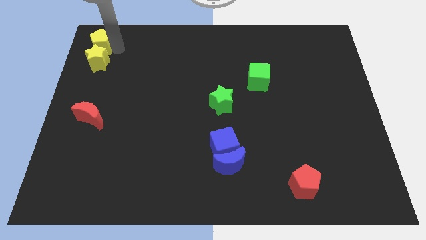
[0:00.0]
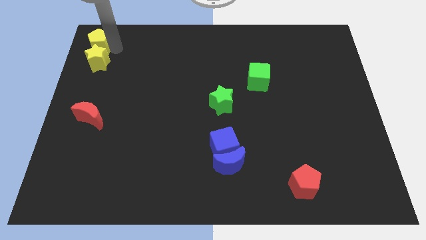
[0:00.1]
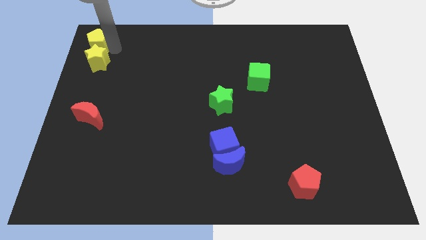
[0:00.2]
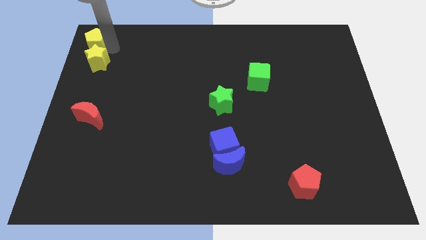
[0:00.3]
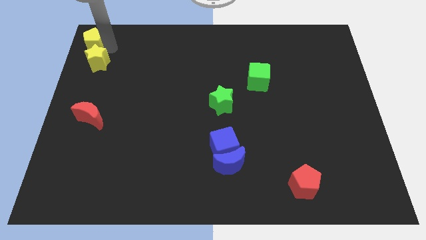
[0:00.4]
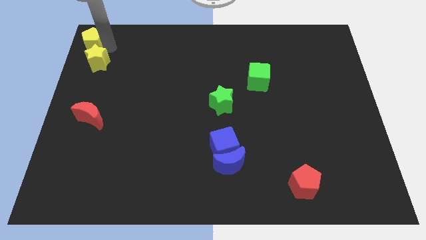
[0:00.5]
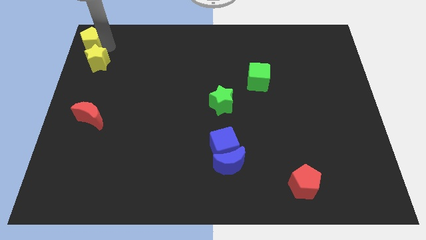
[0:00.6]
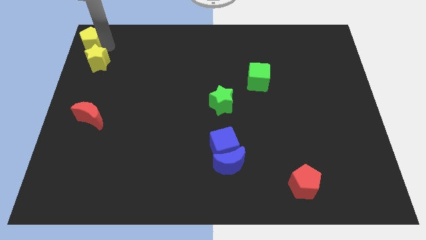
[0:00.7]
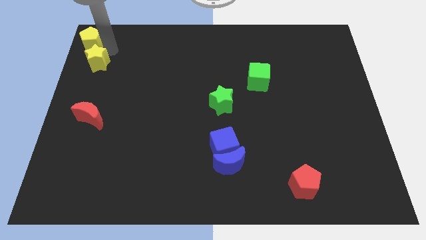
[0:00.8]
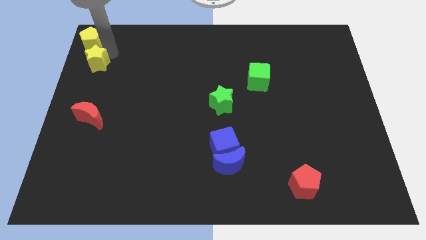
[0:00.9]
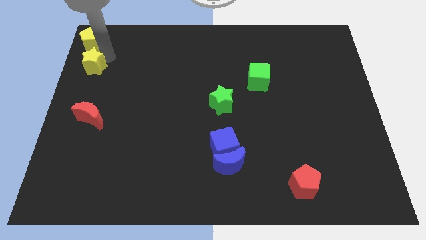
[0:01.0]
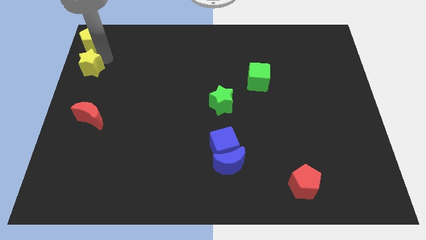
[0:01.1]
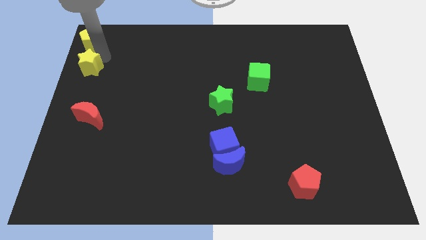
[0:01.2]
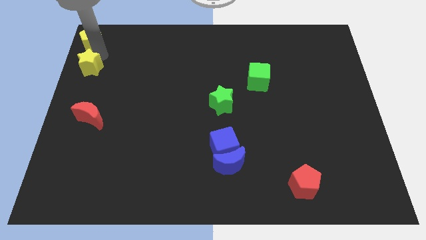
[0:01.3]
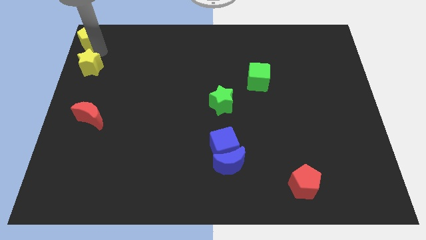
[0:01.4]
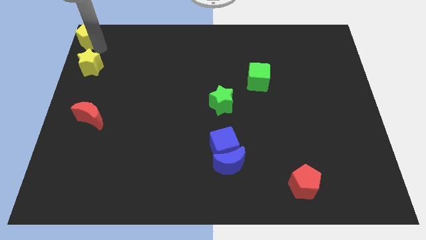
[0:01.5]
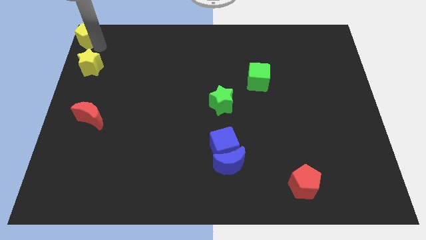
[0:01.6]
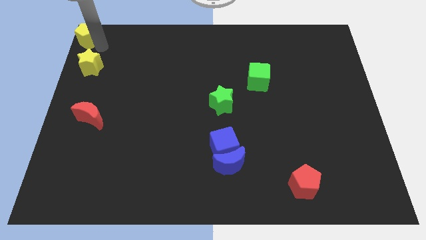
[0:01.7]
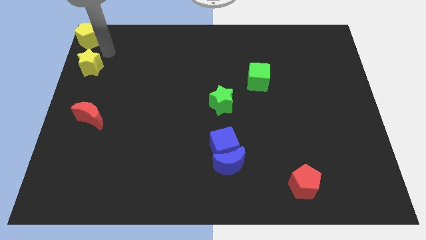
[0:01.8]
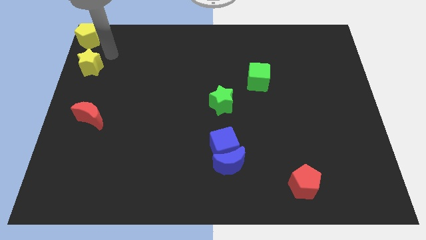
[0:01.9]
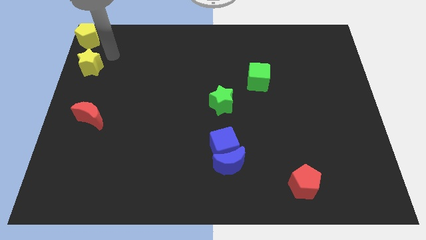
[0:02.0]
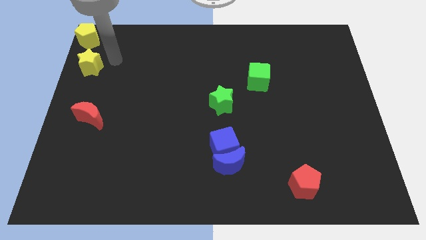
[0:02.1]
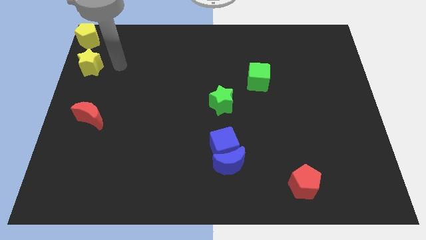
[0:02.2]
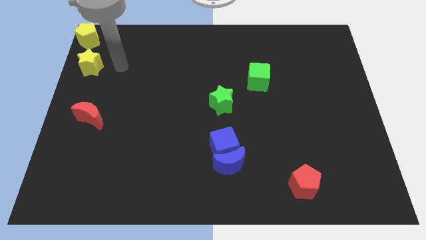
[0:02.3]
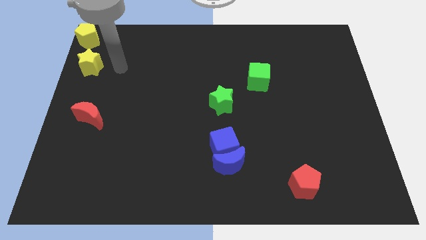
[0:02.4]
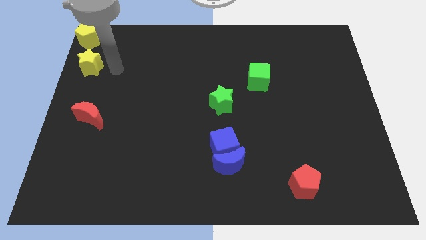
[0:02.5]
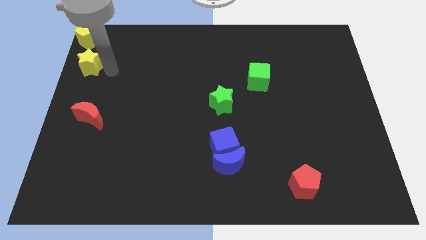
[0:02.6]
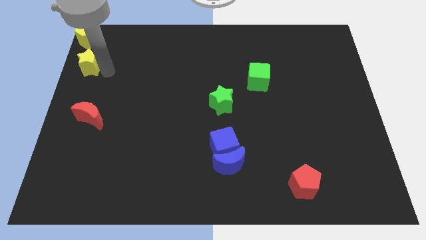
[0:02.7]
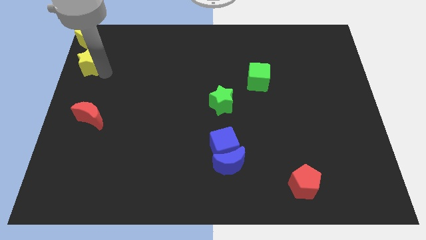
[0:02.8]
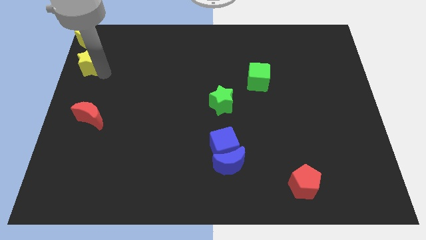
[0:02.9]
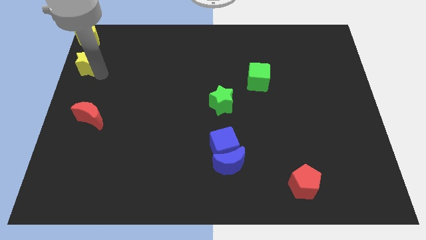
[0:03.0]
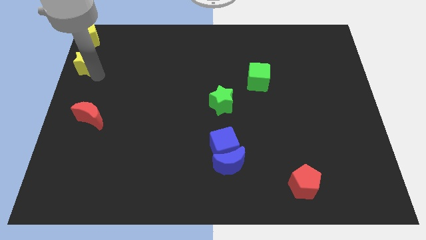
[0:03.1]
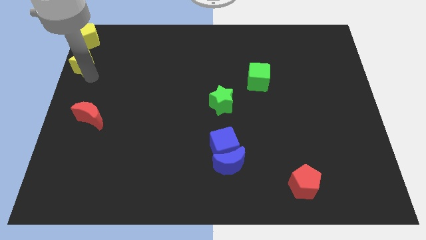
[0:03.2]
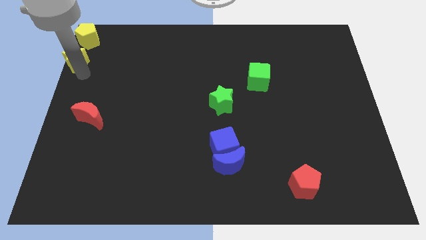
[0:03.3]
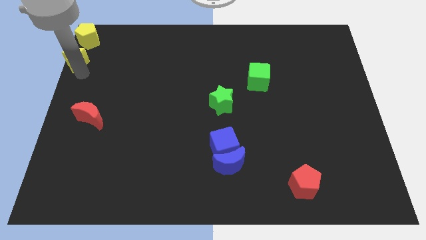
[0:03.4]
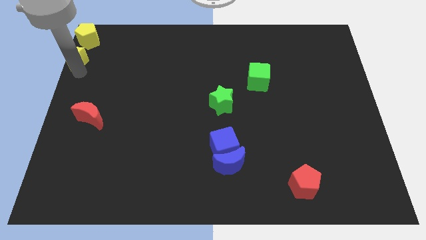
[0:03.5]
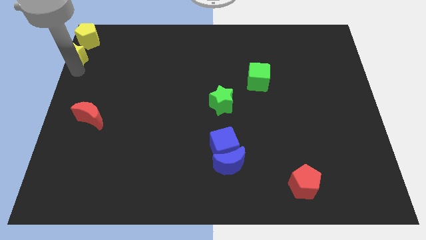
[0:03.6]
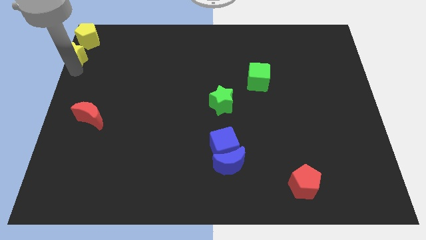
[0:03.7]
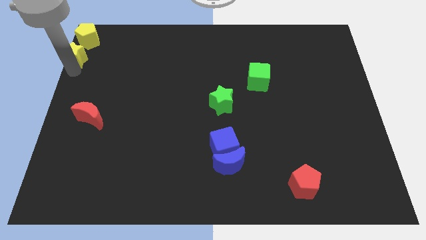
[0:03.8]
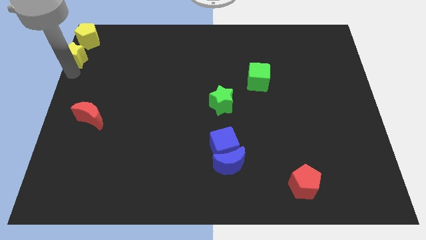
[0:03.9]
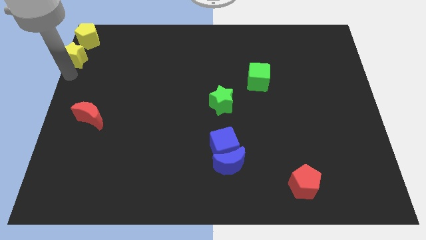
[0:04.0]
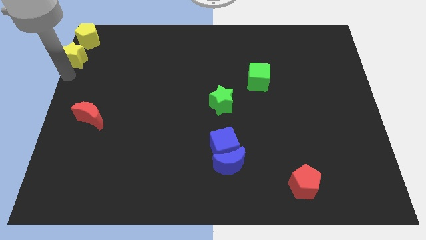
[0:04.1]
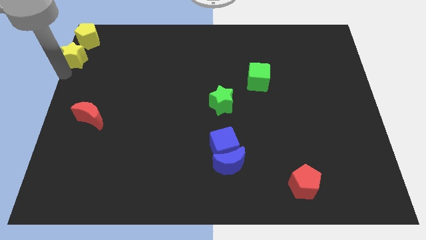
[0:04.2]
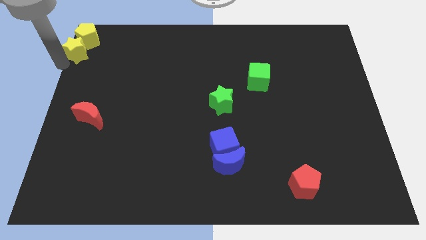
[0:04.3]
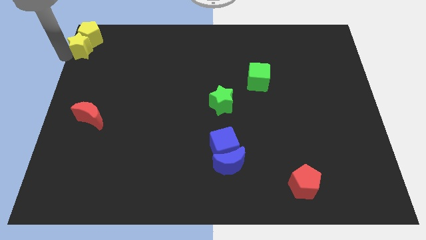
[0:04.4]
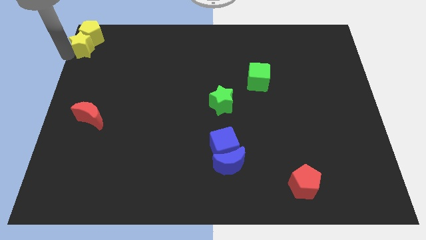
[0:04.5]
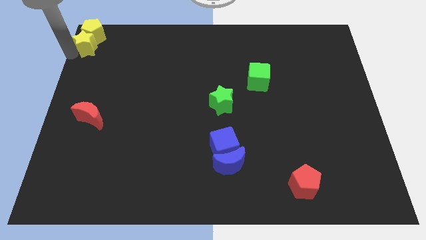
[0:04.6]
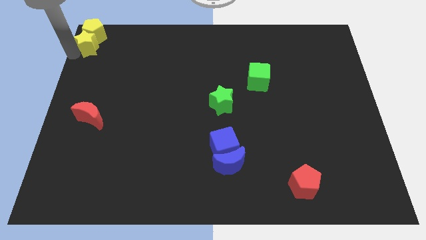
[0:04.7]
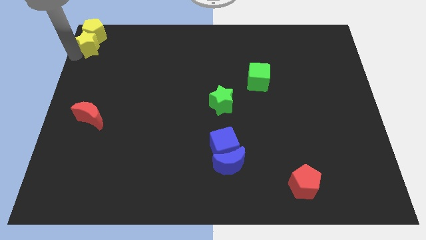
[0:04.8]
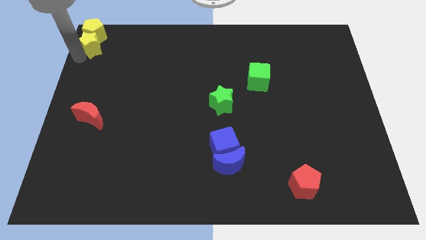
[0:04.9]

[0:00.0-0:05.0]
push the yellow star into the yellow pentagon

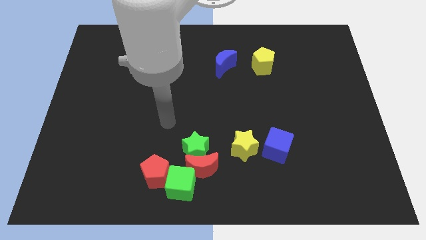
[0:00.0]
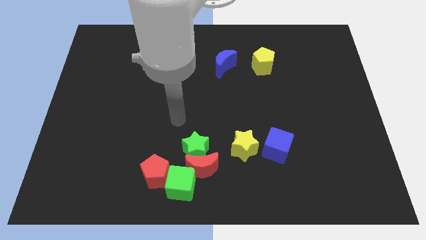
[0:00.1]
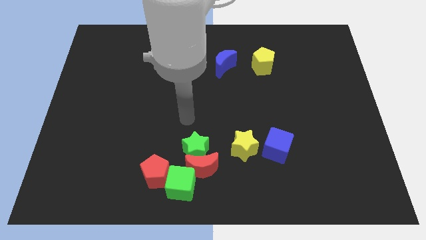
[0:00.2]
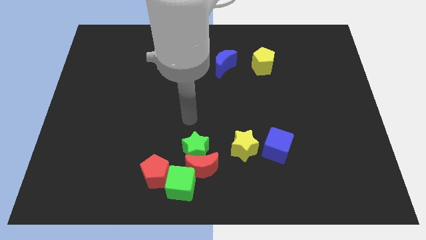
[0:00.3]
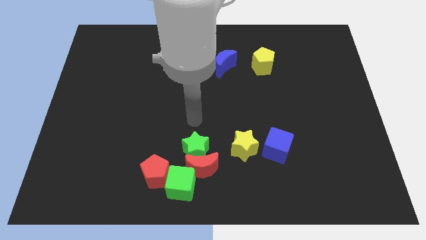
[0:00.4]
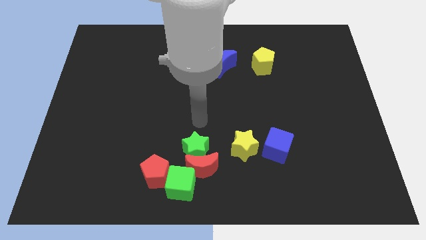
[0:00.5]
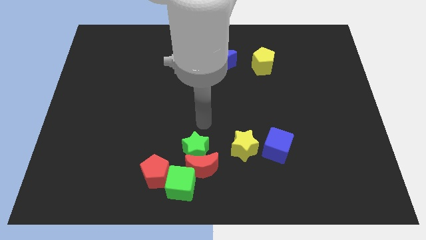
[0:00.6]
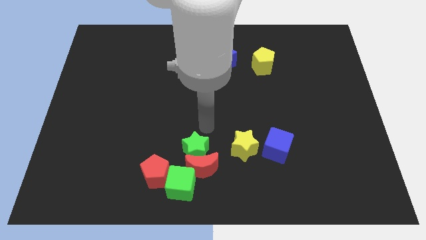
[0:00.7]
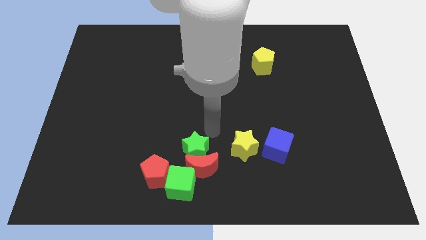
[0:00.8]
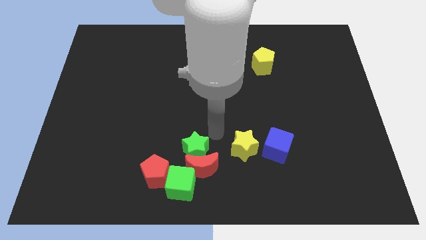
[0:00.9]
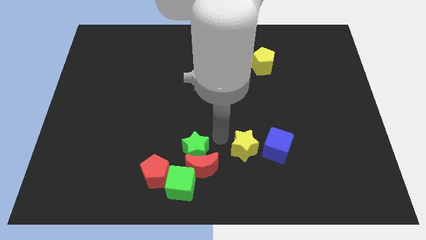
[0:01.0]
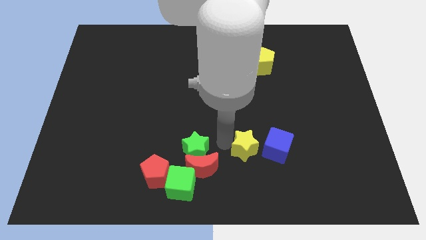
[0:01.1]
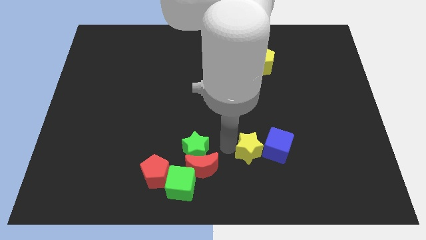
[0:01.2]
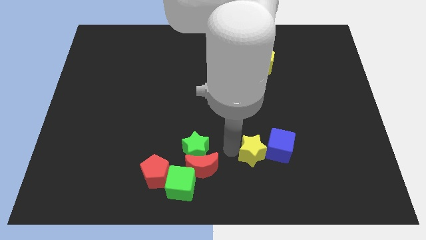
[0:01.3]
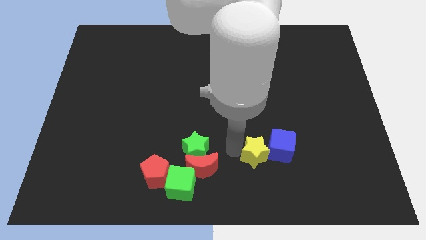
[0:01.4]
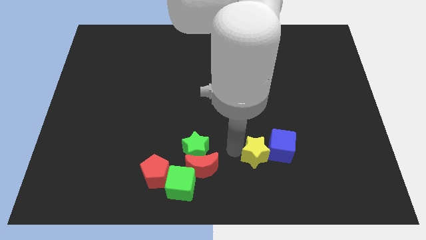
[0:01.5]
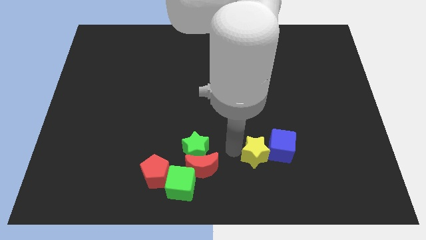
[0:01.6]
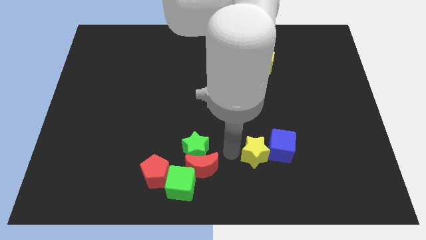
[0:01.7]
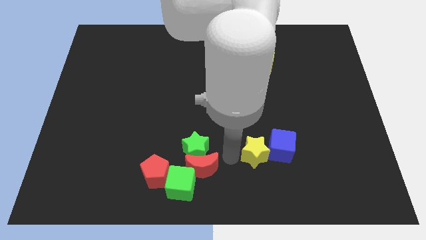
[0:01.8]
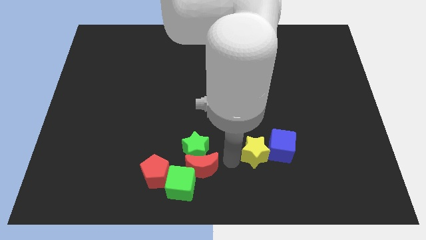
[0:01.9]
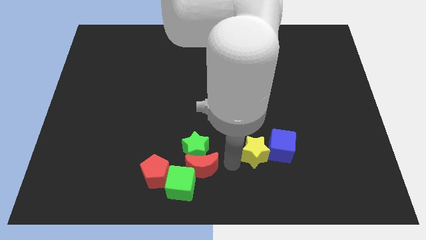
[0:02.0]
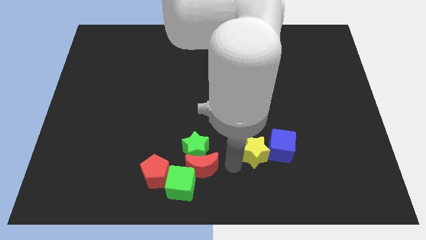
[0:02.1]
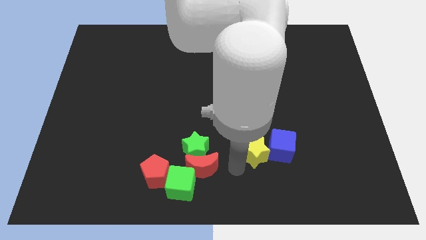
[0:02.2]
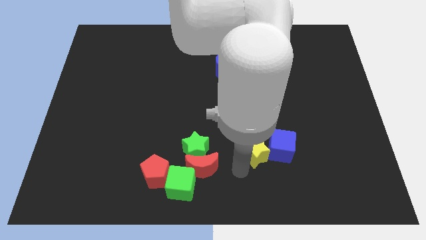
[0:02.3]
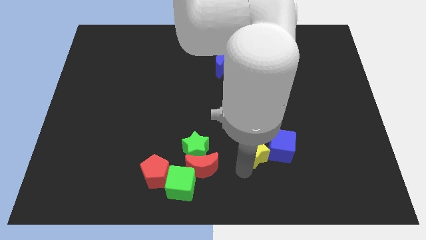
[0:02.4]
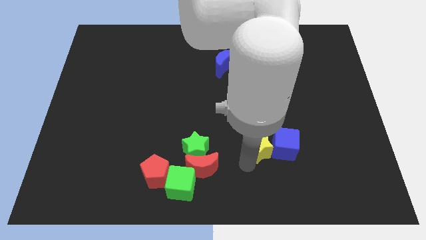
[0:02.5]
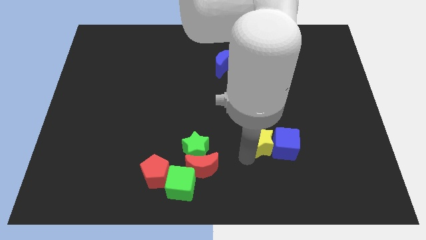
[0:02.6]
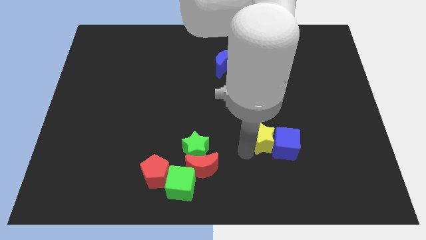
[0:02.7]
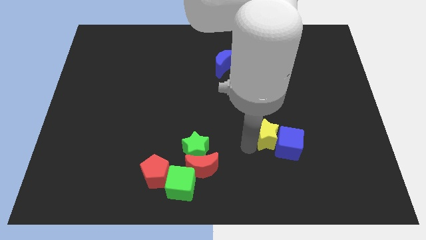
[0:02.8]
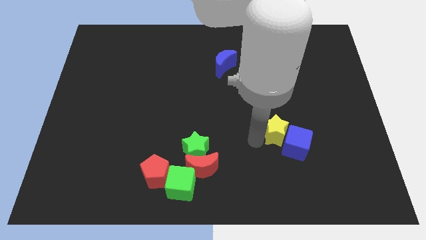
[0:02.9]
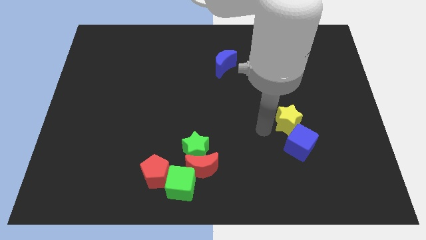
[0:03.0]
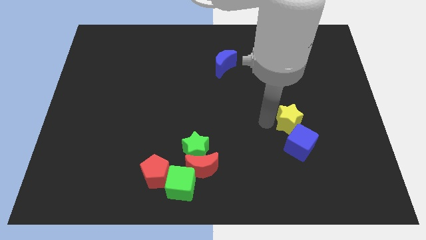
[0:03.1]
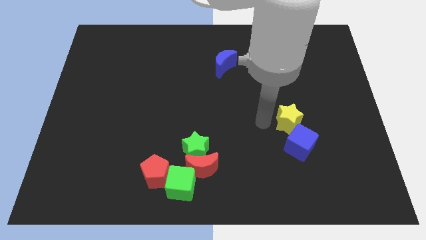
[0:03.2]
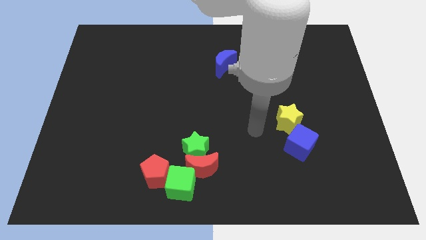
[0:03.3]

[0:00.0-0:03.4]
move the yellow star to the top of the blue cube

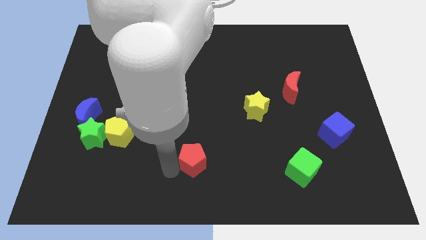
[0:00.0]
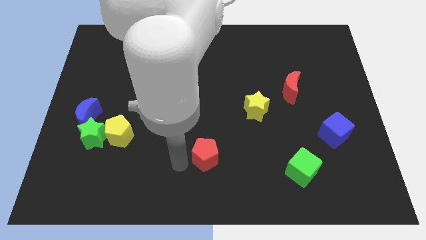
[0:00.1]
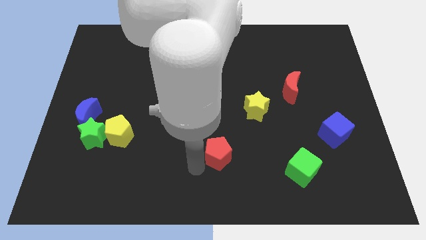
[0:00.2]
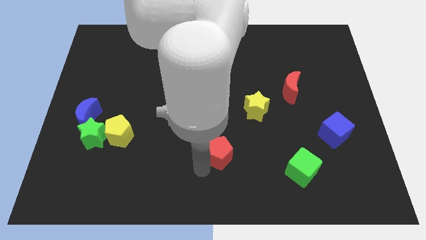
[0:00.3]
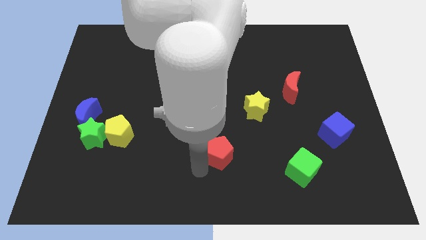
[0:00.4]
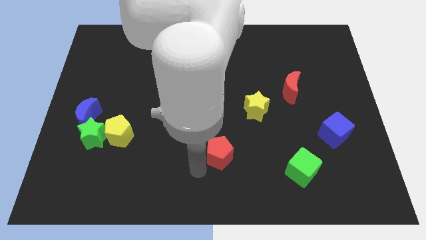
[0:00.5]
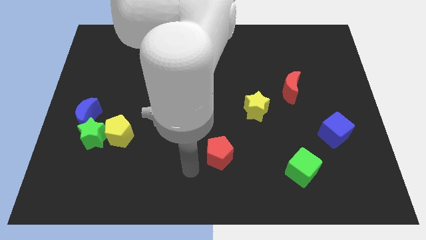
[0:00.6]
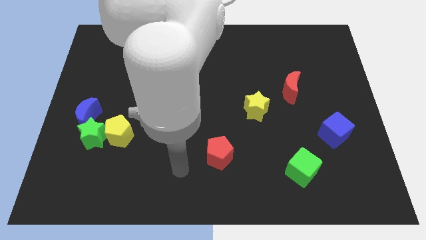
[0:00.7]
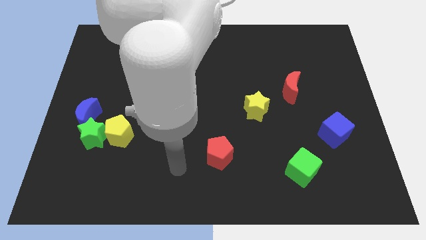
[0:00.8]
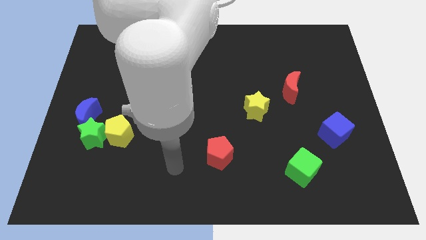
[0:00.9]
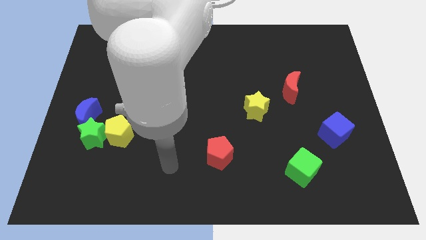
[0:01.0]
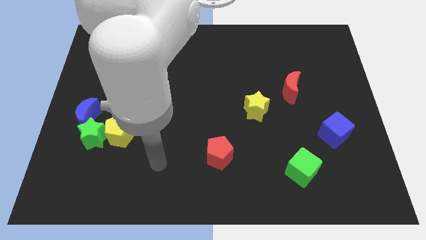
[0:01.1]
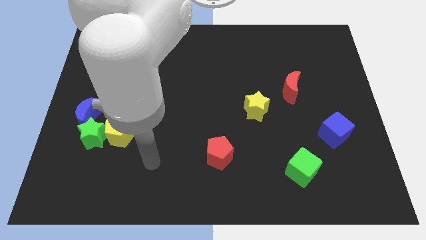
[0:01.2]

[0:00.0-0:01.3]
push the red pentagon to the right of the board
